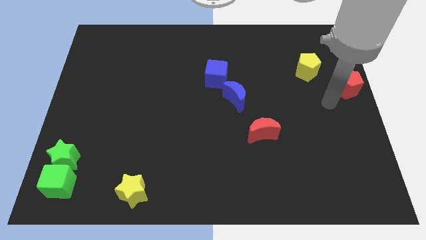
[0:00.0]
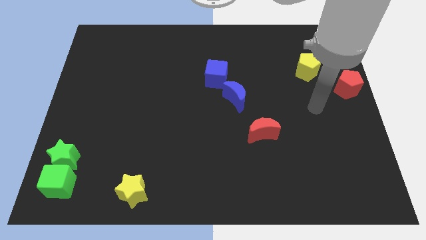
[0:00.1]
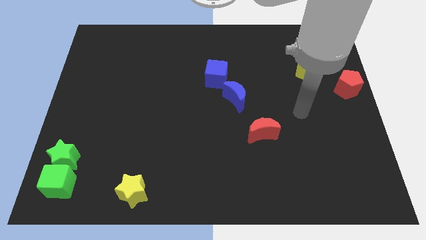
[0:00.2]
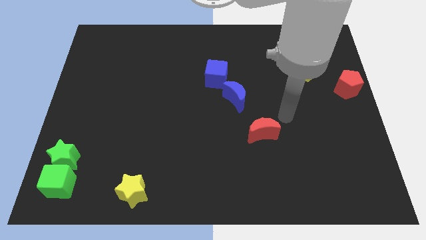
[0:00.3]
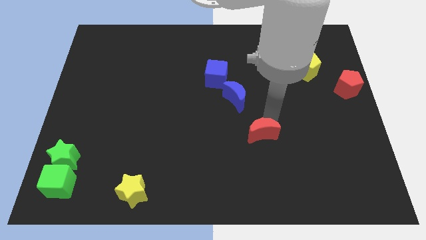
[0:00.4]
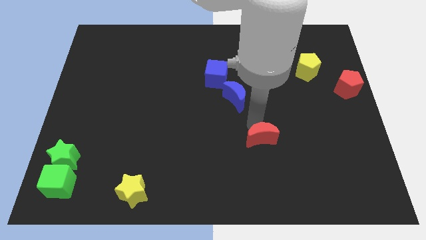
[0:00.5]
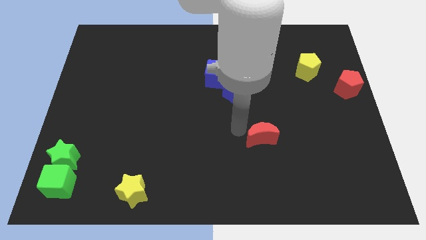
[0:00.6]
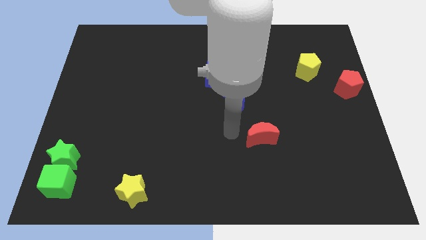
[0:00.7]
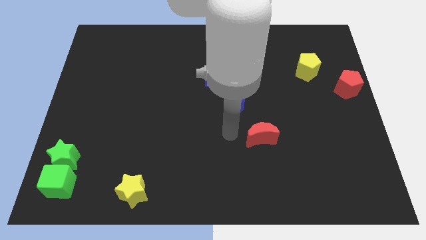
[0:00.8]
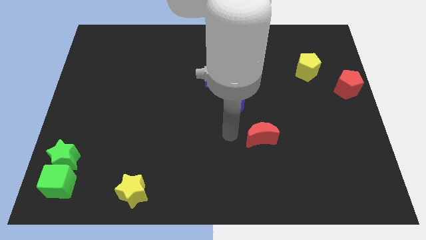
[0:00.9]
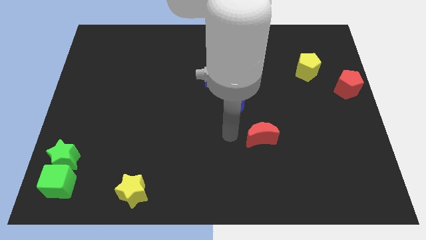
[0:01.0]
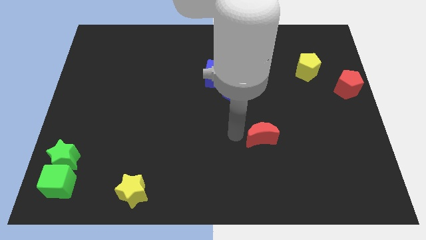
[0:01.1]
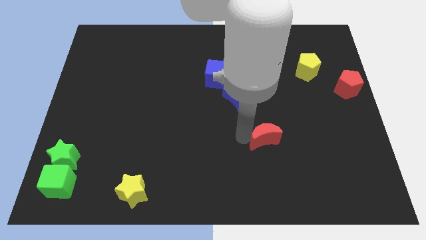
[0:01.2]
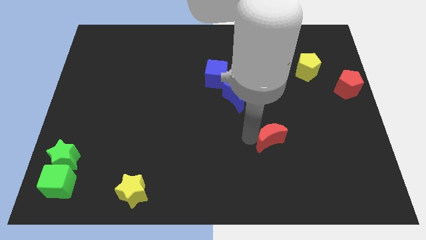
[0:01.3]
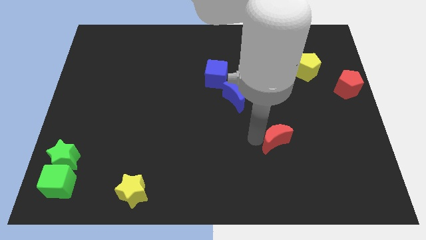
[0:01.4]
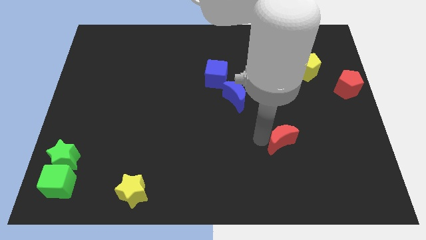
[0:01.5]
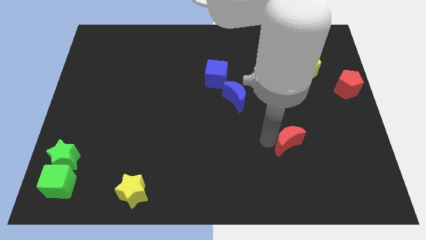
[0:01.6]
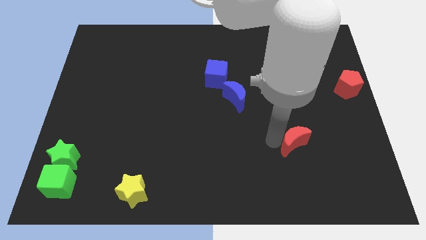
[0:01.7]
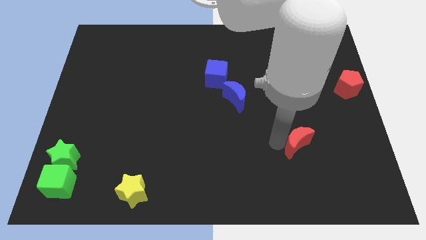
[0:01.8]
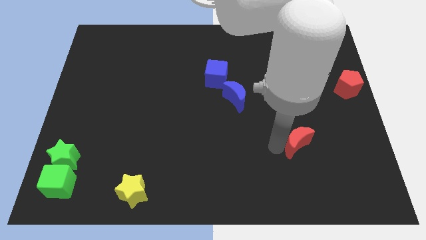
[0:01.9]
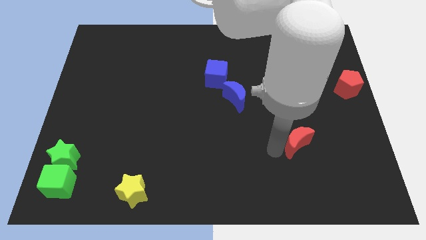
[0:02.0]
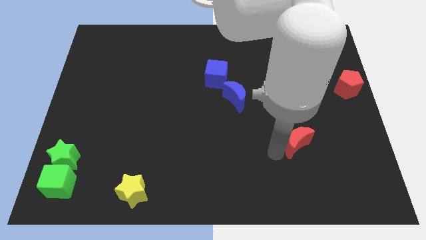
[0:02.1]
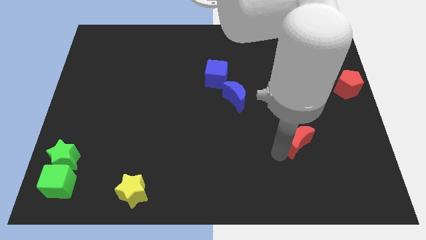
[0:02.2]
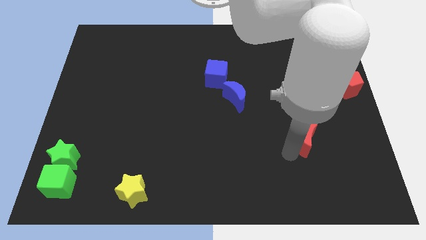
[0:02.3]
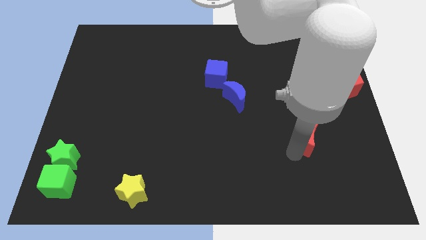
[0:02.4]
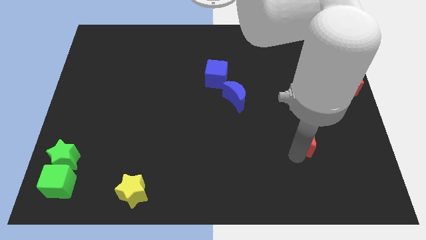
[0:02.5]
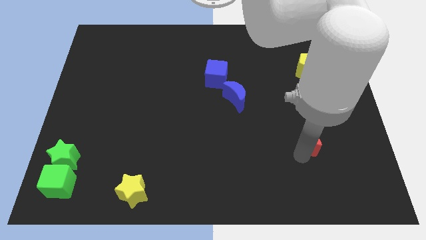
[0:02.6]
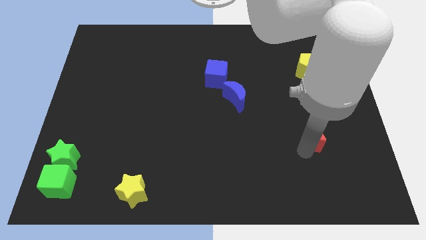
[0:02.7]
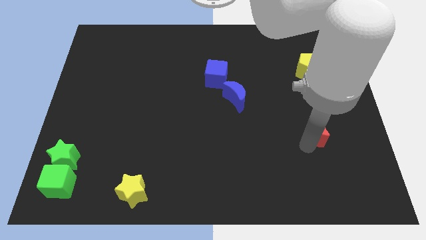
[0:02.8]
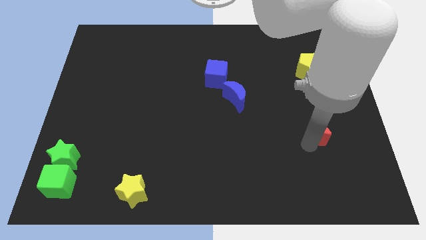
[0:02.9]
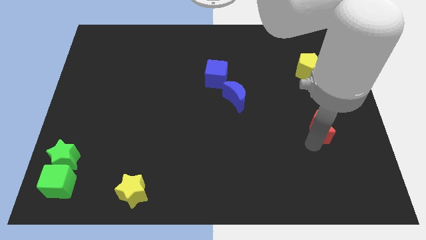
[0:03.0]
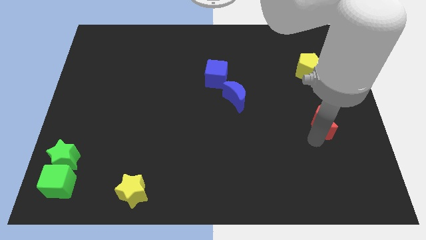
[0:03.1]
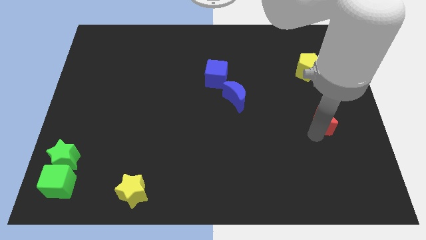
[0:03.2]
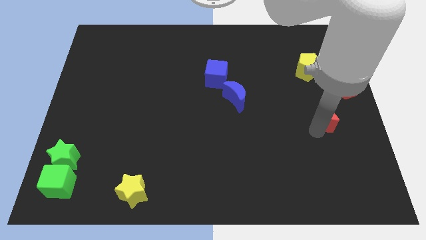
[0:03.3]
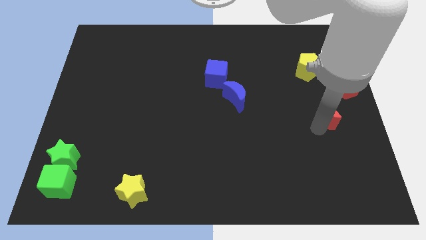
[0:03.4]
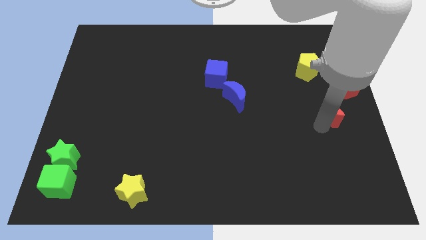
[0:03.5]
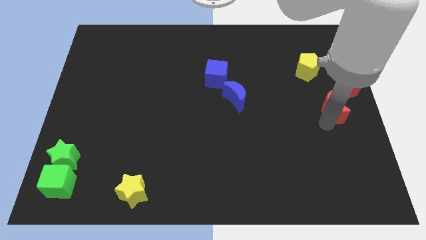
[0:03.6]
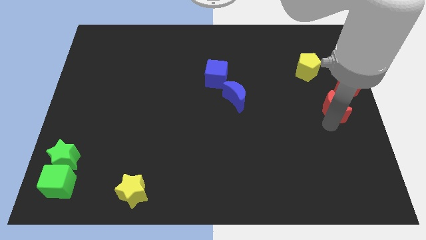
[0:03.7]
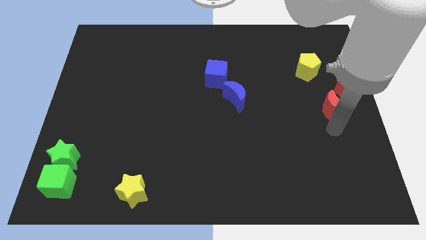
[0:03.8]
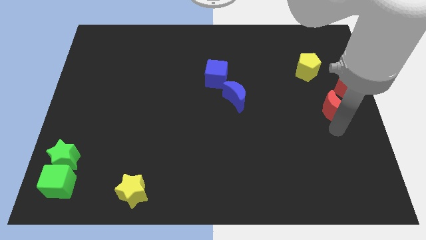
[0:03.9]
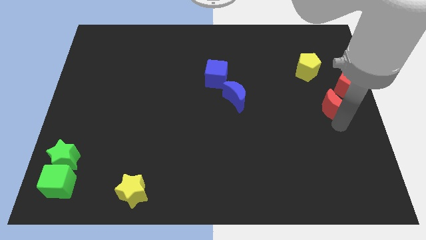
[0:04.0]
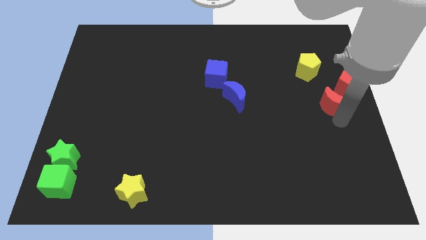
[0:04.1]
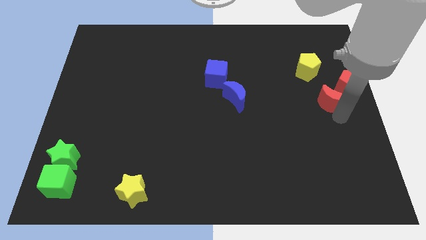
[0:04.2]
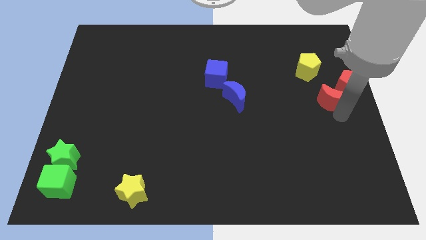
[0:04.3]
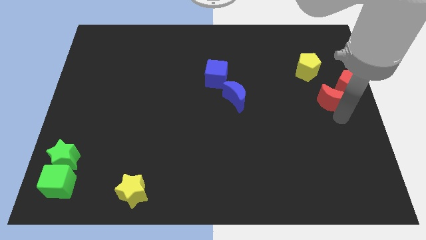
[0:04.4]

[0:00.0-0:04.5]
move the red crescent towards red pentagon

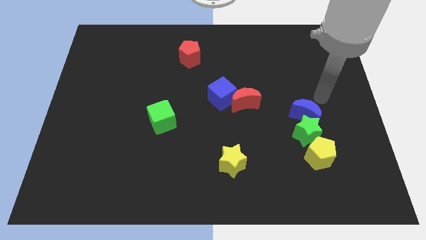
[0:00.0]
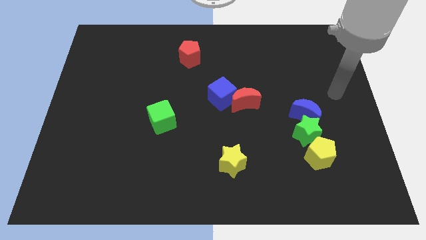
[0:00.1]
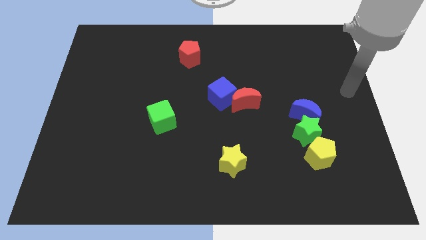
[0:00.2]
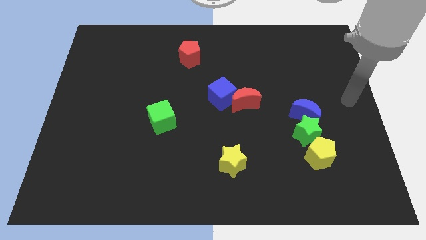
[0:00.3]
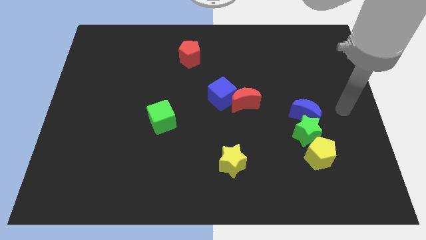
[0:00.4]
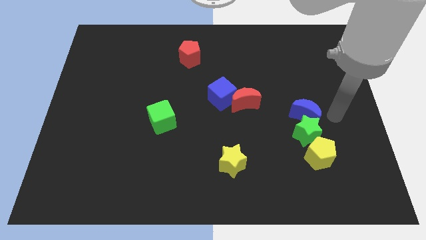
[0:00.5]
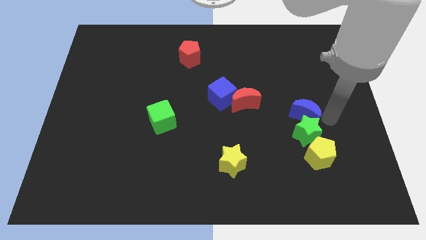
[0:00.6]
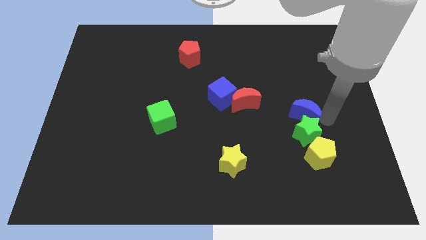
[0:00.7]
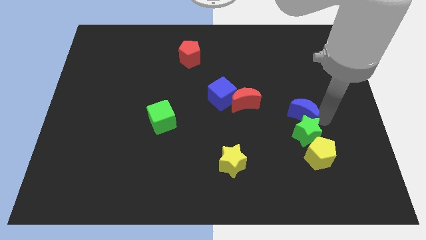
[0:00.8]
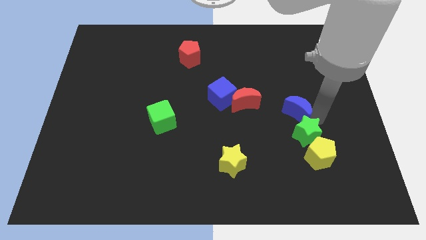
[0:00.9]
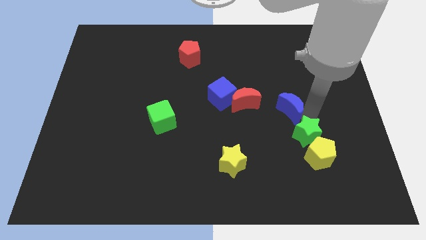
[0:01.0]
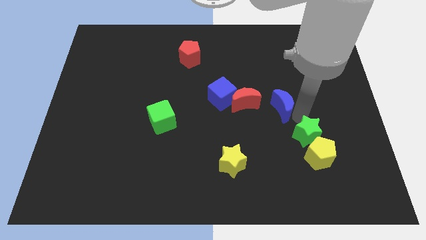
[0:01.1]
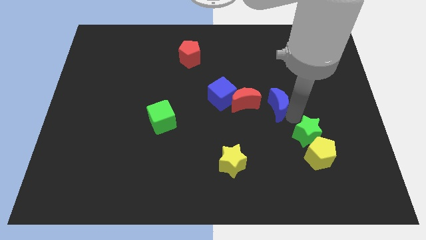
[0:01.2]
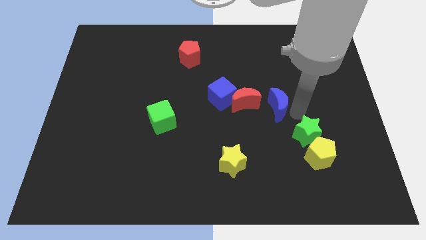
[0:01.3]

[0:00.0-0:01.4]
separate blue moon from green star

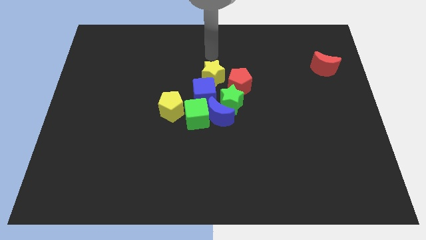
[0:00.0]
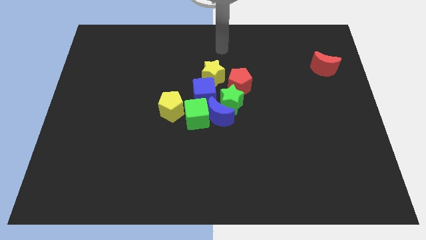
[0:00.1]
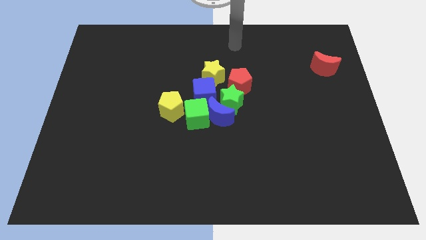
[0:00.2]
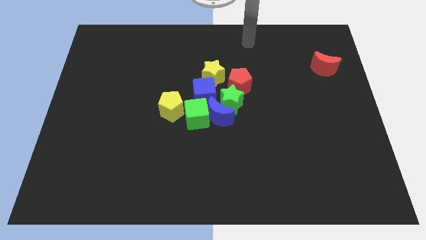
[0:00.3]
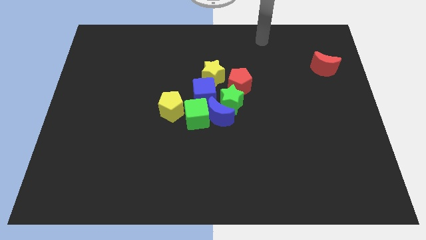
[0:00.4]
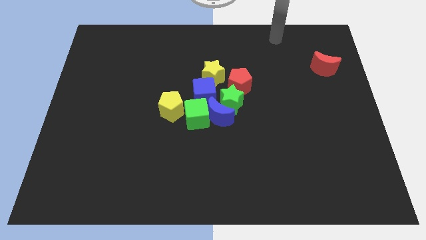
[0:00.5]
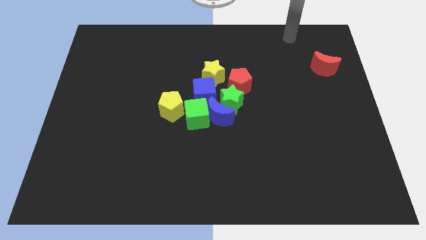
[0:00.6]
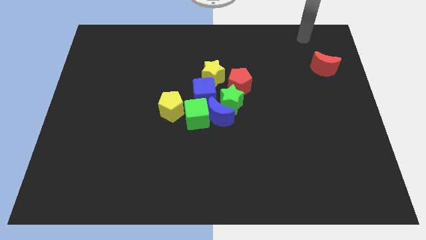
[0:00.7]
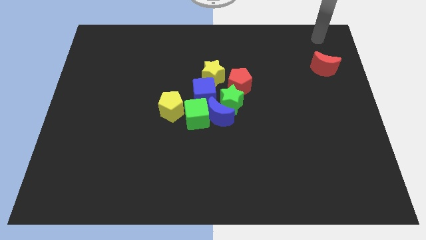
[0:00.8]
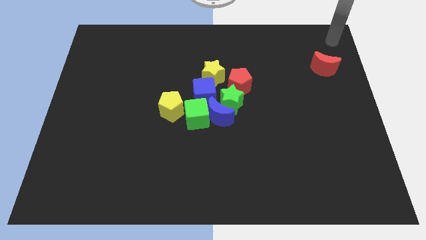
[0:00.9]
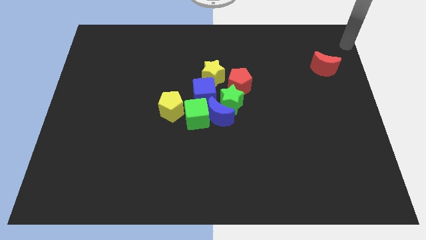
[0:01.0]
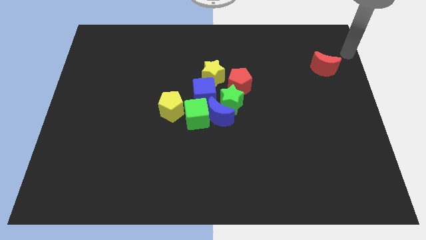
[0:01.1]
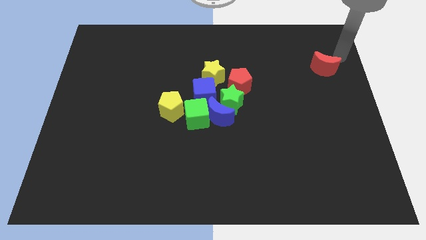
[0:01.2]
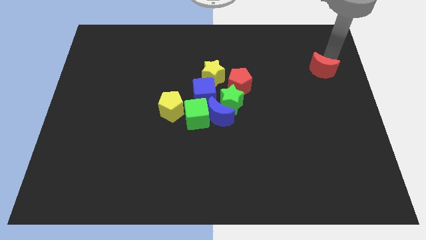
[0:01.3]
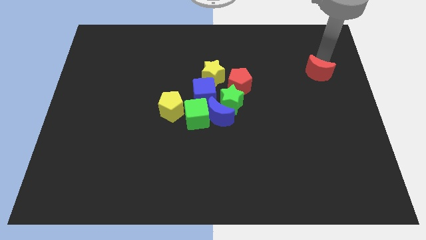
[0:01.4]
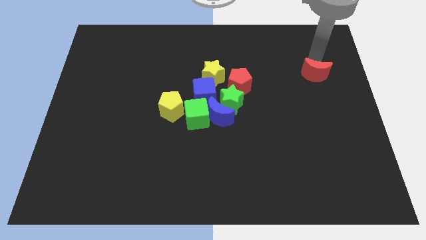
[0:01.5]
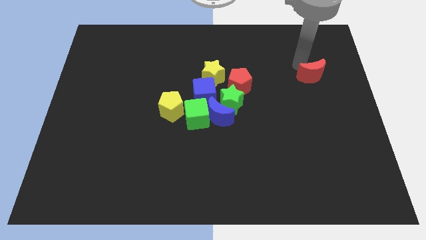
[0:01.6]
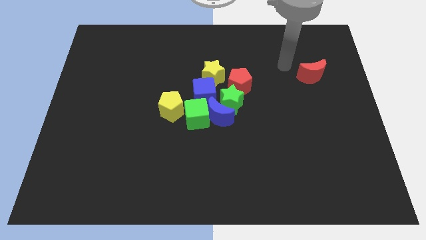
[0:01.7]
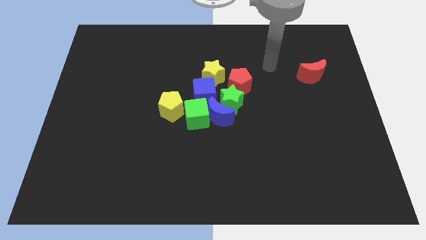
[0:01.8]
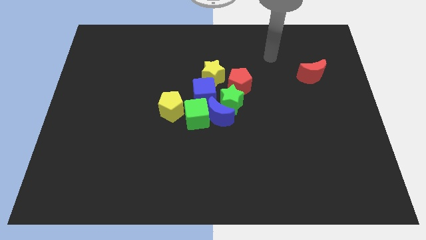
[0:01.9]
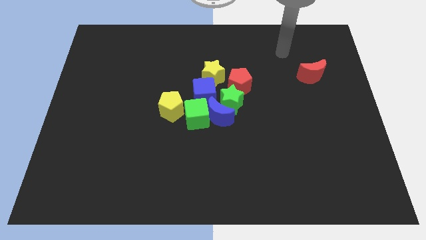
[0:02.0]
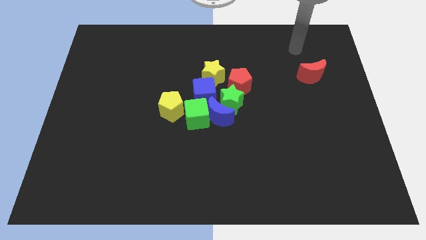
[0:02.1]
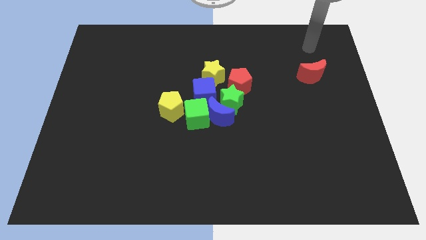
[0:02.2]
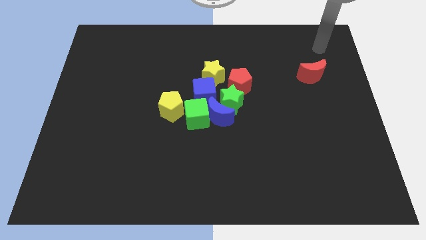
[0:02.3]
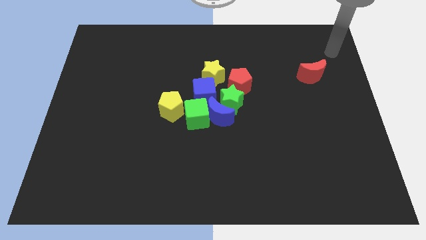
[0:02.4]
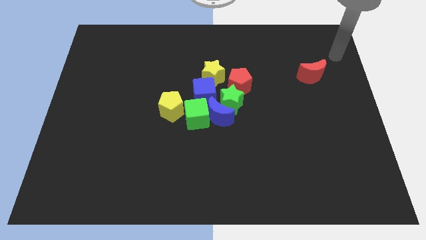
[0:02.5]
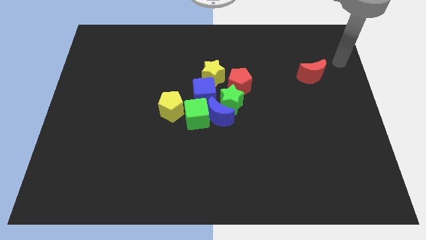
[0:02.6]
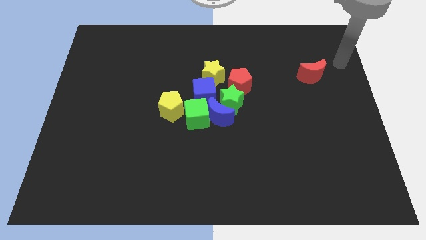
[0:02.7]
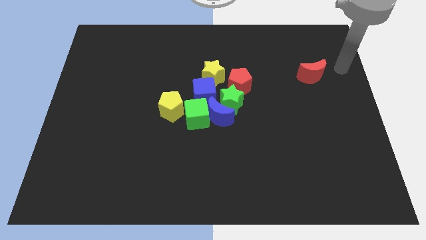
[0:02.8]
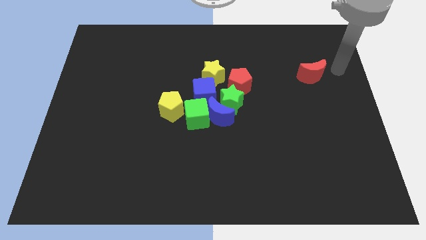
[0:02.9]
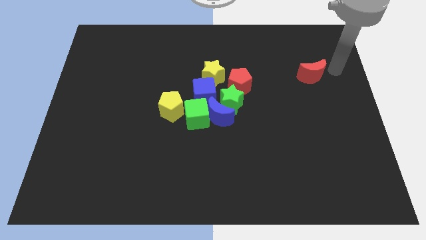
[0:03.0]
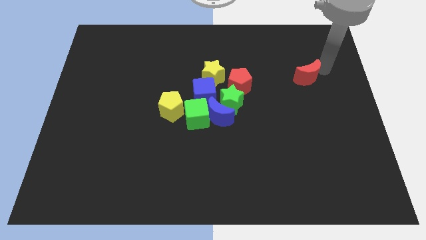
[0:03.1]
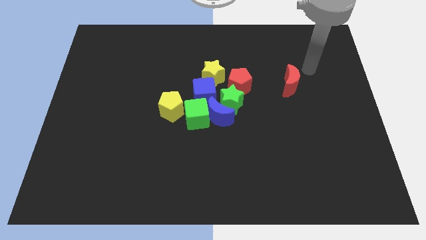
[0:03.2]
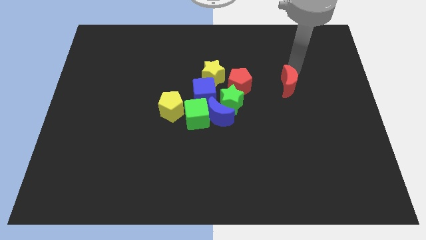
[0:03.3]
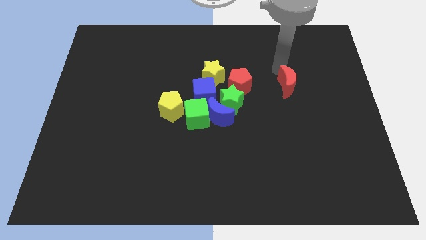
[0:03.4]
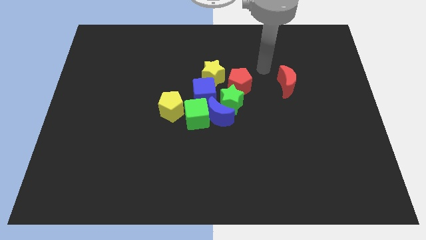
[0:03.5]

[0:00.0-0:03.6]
move red crescent towards center of board
